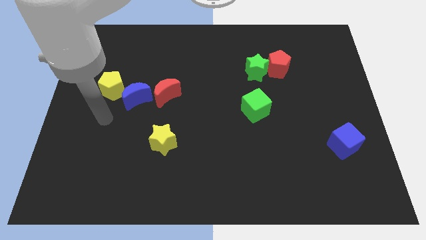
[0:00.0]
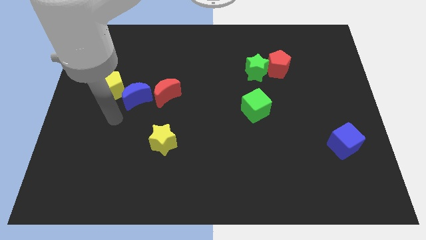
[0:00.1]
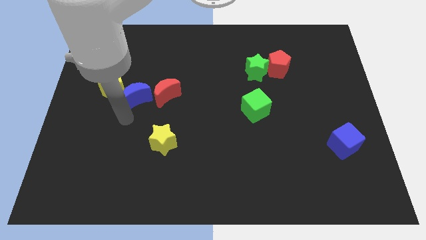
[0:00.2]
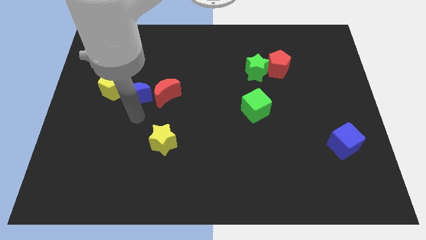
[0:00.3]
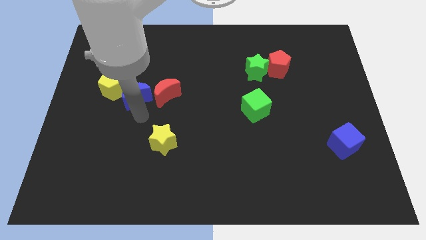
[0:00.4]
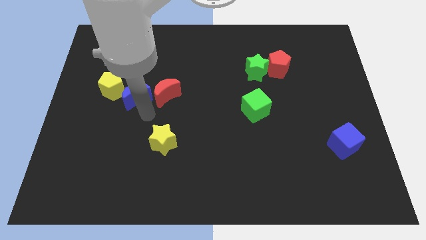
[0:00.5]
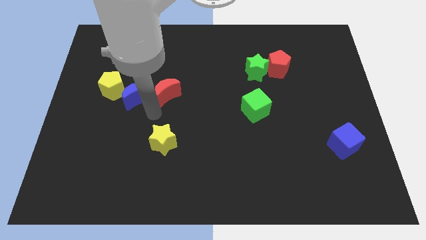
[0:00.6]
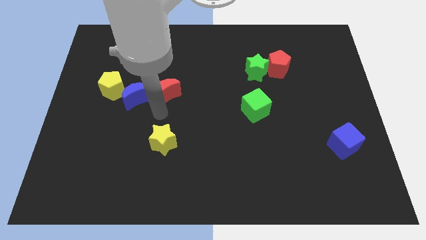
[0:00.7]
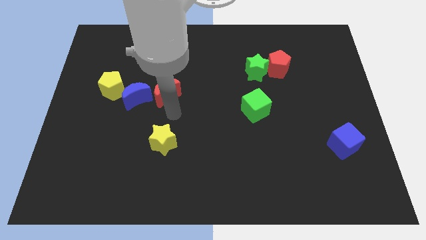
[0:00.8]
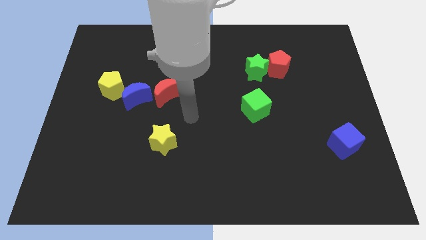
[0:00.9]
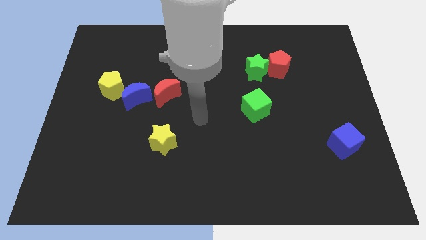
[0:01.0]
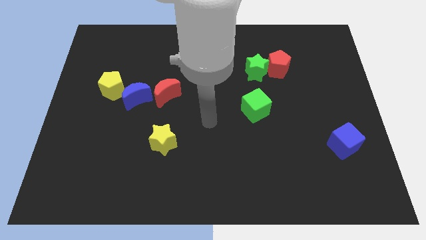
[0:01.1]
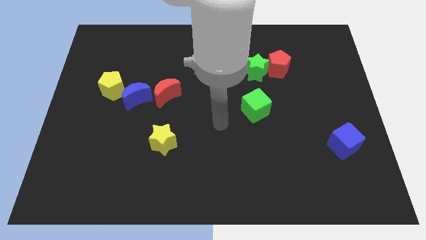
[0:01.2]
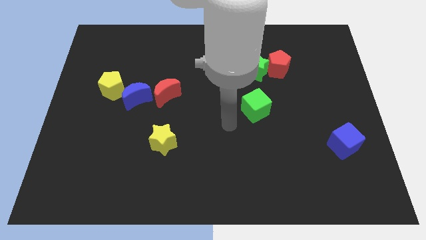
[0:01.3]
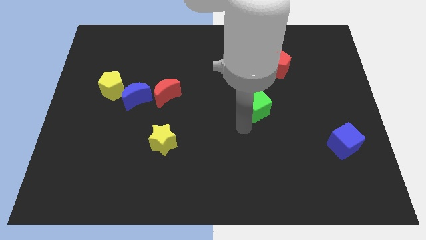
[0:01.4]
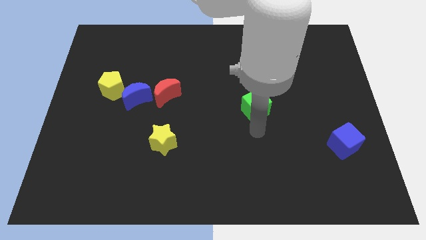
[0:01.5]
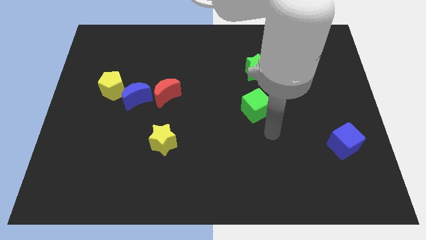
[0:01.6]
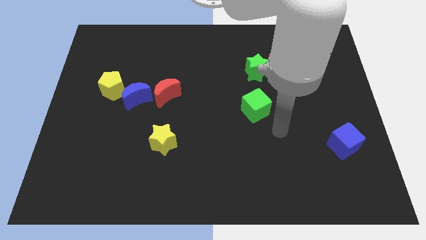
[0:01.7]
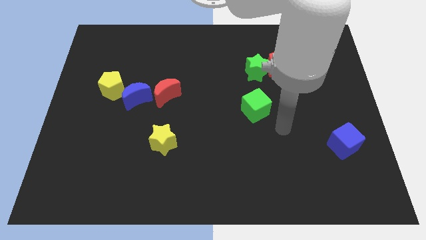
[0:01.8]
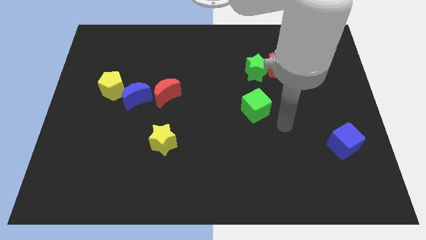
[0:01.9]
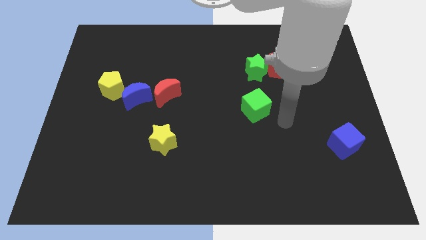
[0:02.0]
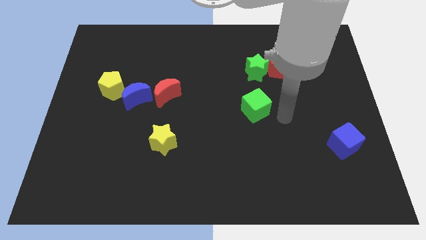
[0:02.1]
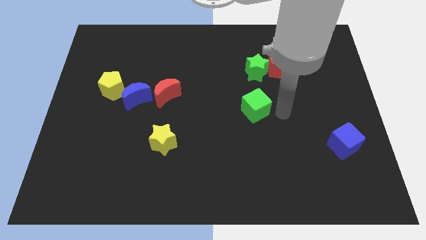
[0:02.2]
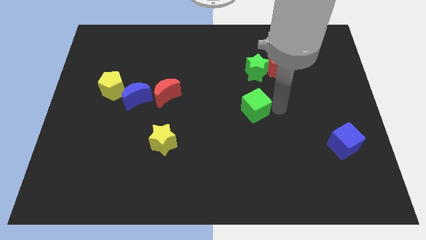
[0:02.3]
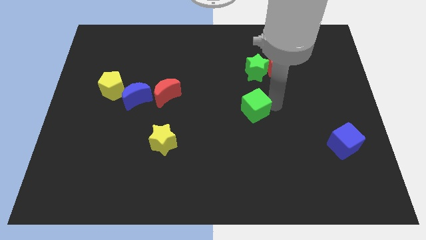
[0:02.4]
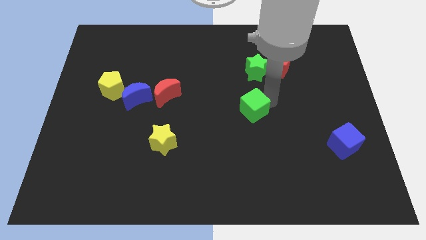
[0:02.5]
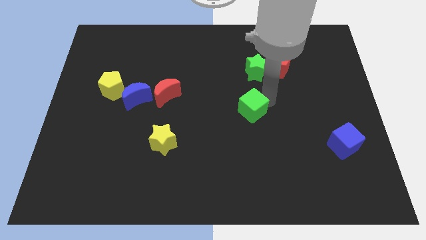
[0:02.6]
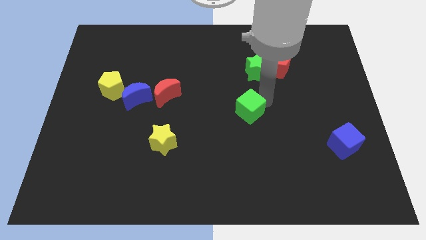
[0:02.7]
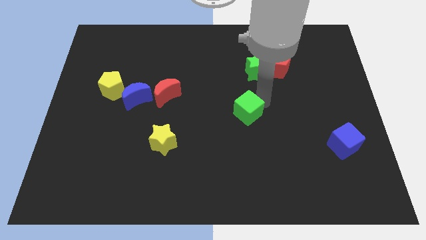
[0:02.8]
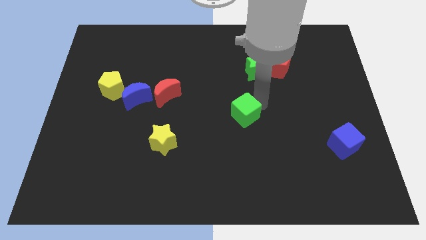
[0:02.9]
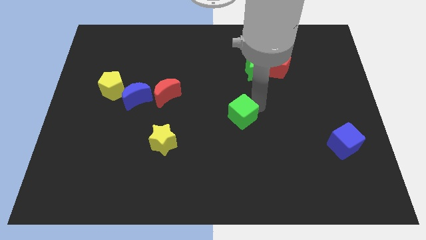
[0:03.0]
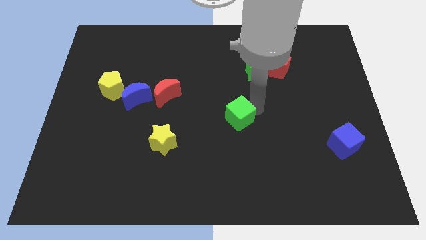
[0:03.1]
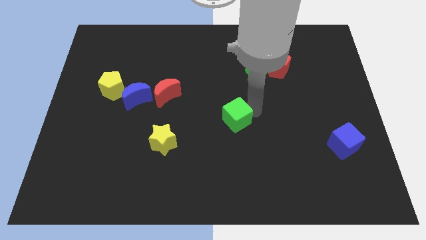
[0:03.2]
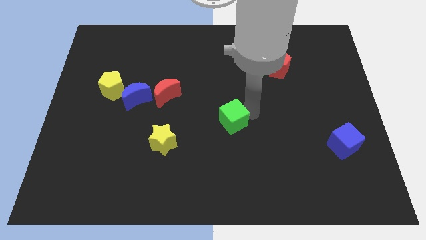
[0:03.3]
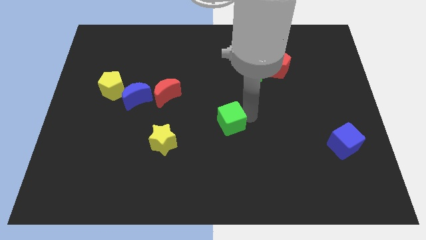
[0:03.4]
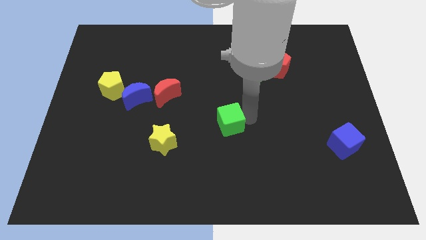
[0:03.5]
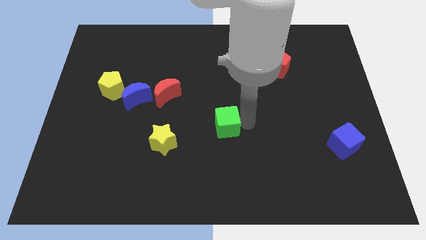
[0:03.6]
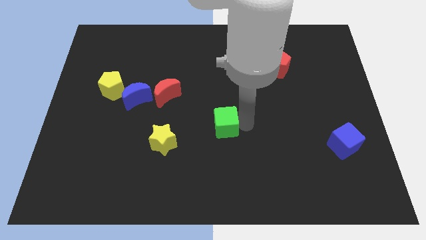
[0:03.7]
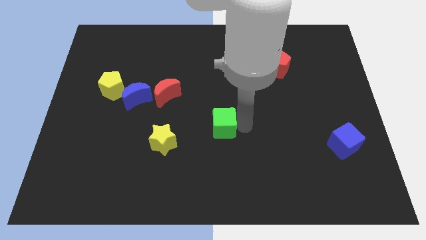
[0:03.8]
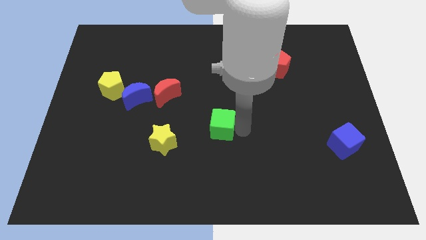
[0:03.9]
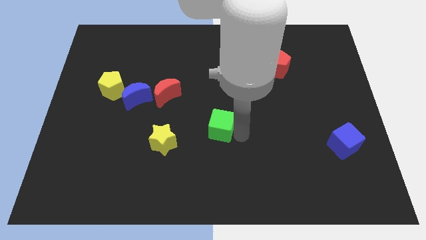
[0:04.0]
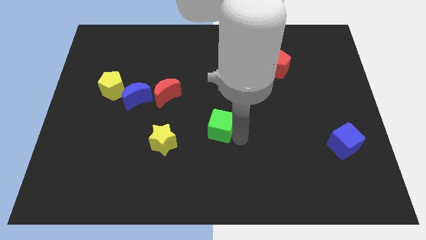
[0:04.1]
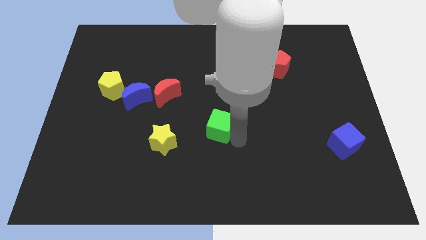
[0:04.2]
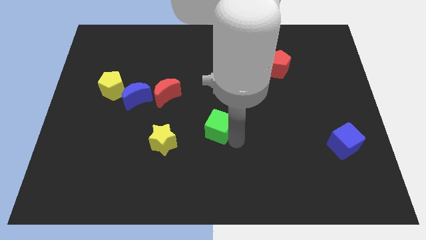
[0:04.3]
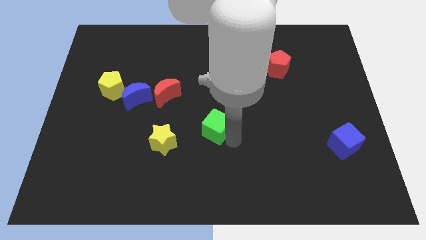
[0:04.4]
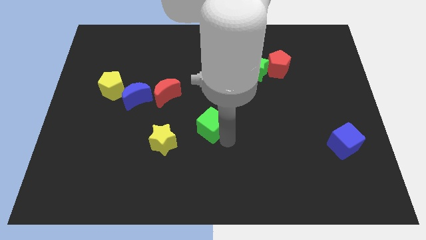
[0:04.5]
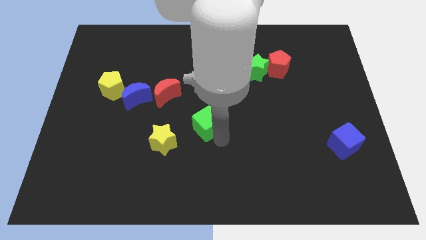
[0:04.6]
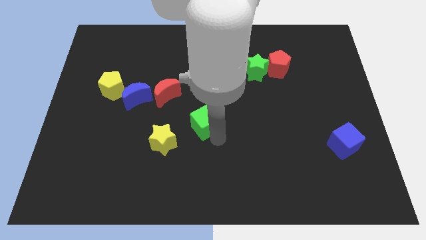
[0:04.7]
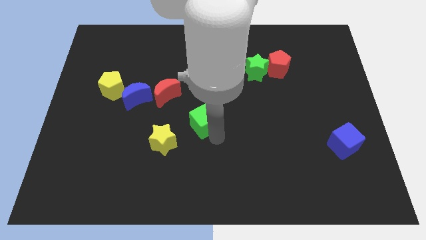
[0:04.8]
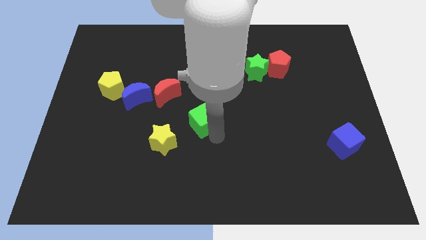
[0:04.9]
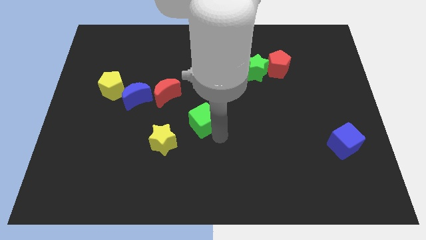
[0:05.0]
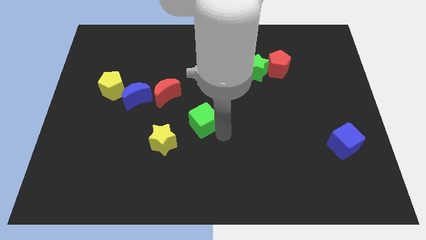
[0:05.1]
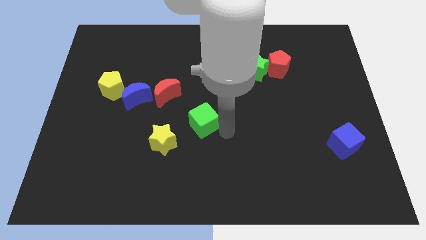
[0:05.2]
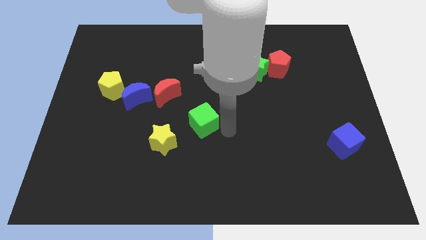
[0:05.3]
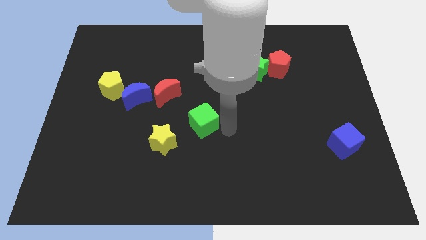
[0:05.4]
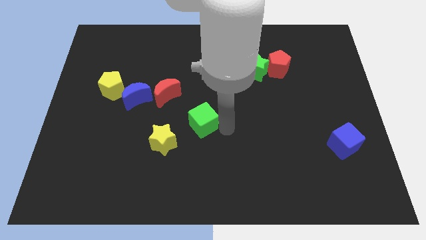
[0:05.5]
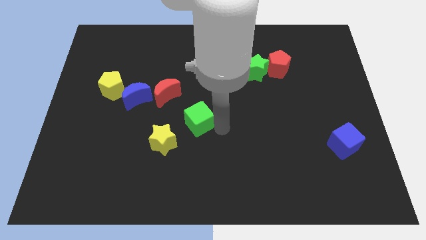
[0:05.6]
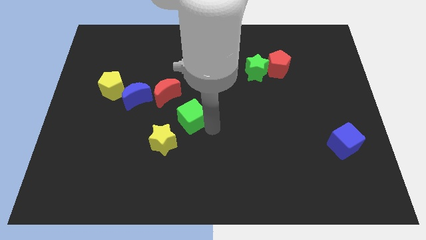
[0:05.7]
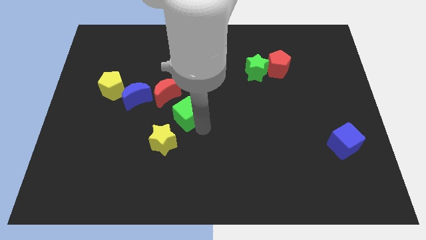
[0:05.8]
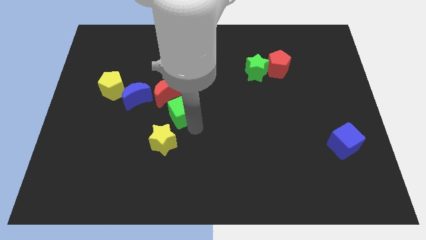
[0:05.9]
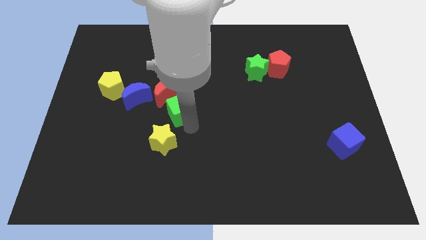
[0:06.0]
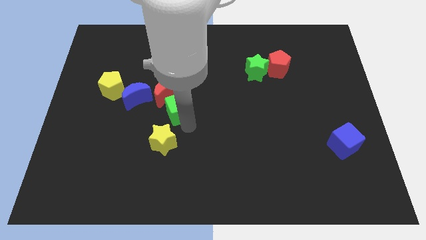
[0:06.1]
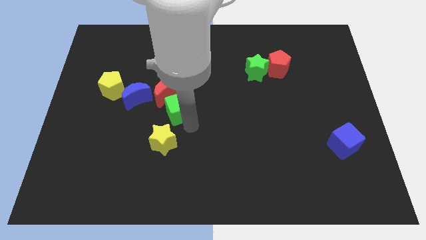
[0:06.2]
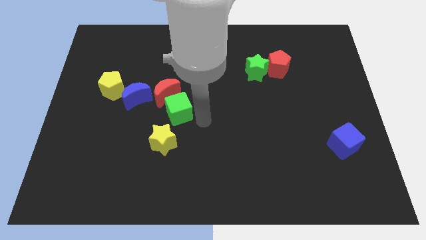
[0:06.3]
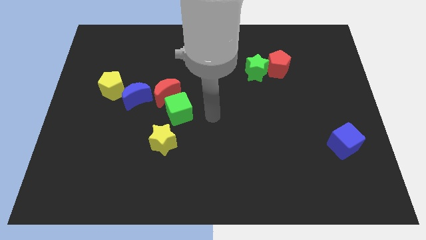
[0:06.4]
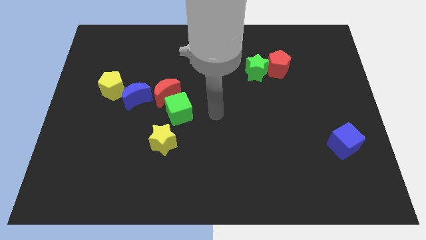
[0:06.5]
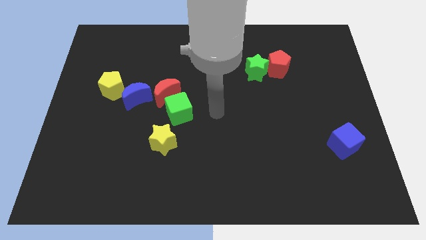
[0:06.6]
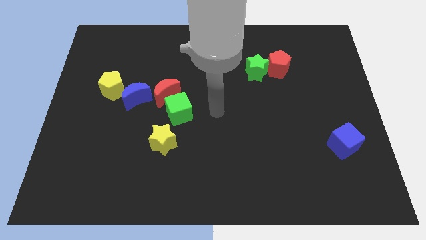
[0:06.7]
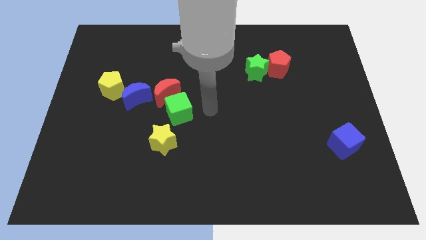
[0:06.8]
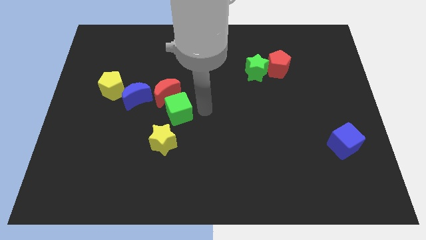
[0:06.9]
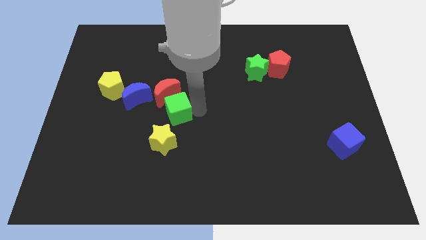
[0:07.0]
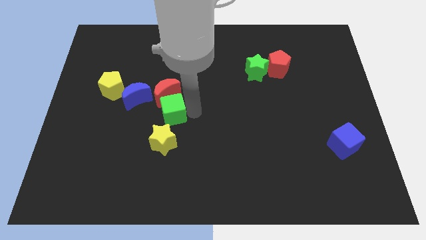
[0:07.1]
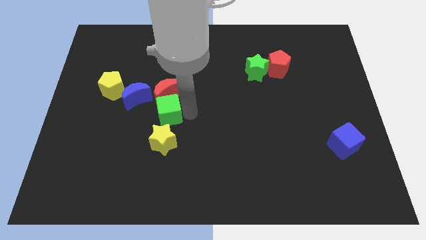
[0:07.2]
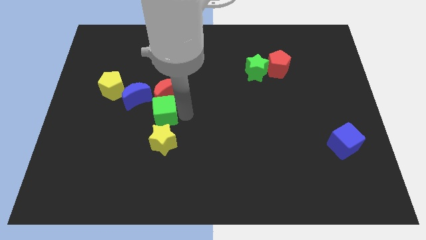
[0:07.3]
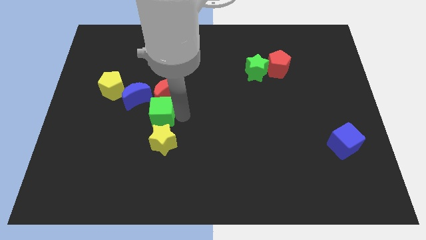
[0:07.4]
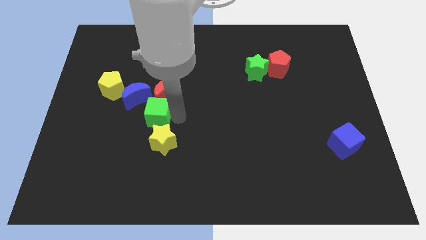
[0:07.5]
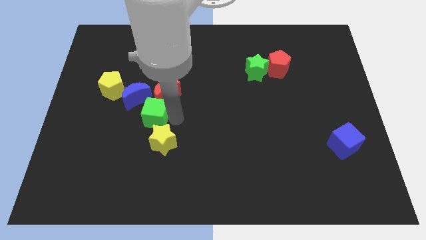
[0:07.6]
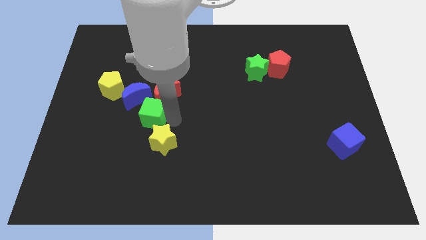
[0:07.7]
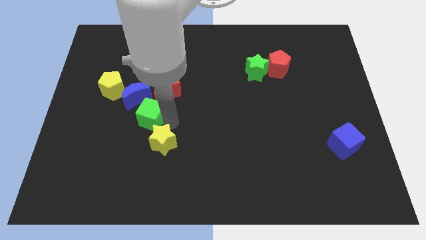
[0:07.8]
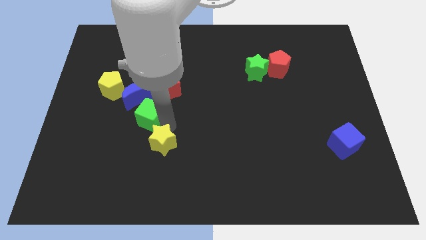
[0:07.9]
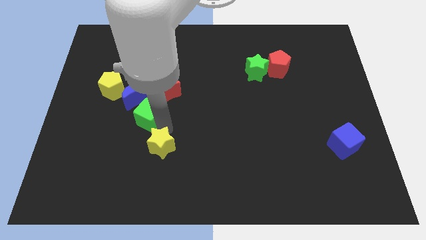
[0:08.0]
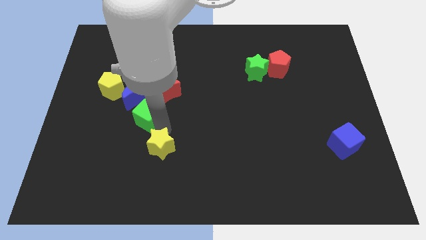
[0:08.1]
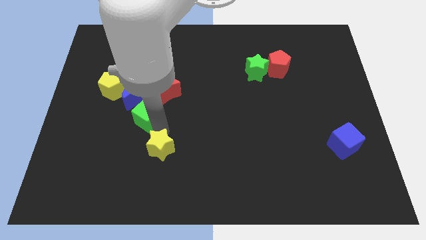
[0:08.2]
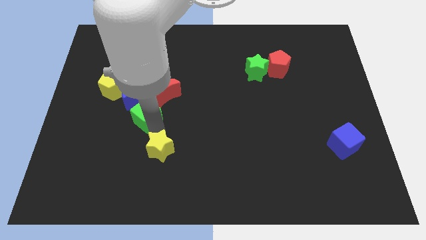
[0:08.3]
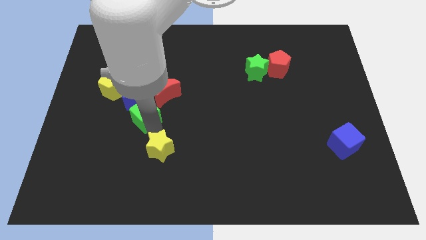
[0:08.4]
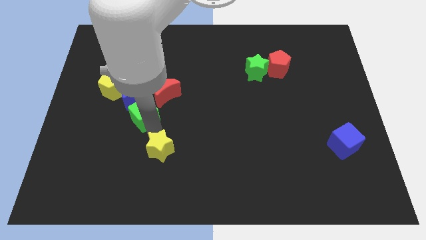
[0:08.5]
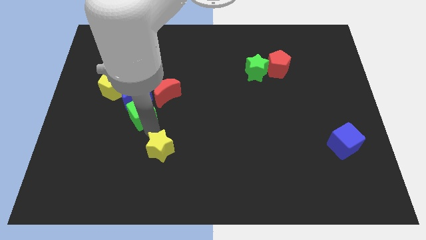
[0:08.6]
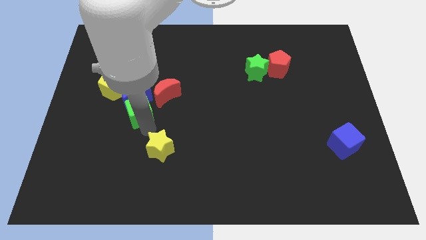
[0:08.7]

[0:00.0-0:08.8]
slide the green cube to the blue moon
